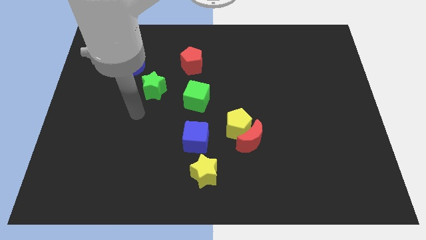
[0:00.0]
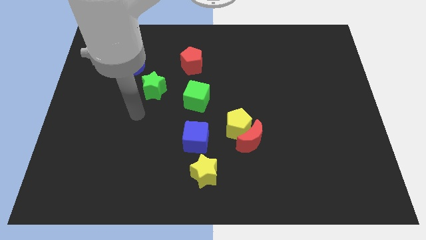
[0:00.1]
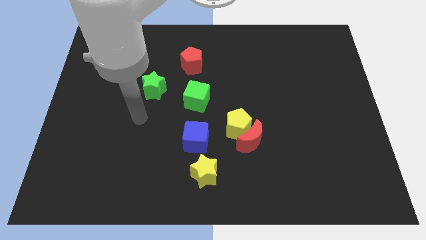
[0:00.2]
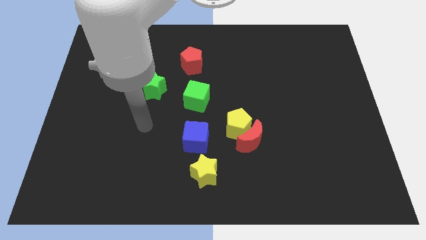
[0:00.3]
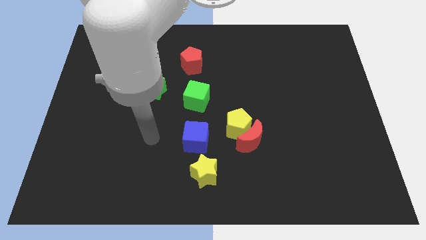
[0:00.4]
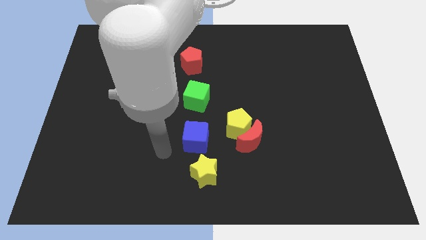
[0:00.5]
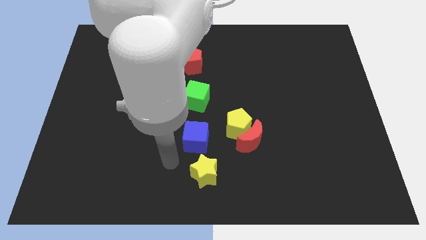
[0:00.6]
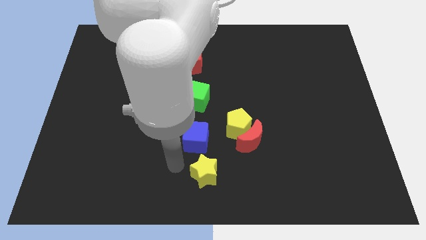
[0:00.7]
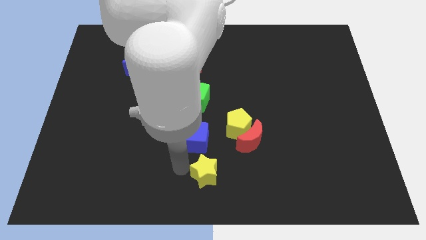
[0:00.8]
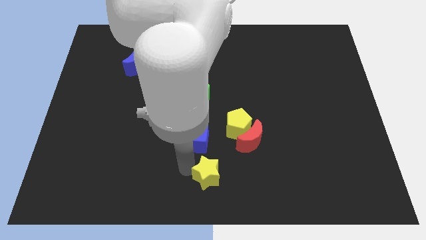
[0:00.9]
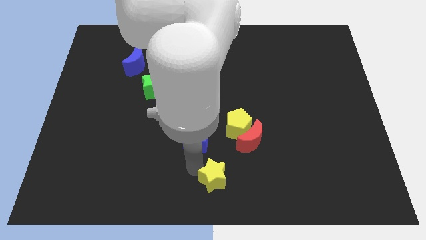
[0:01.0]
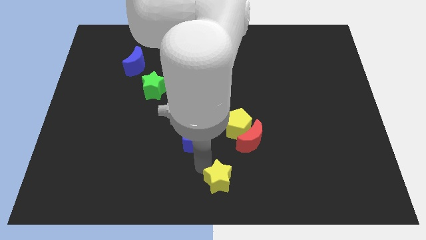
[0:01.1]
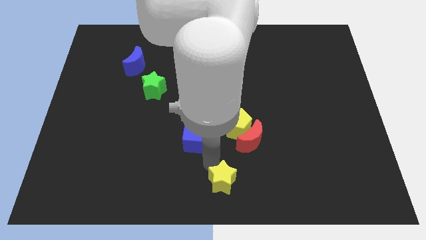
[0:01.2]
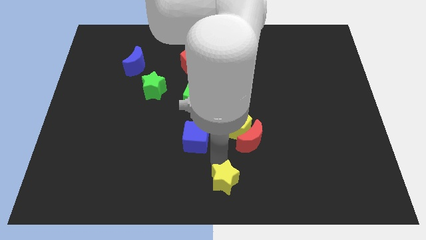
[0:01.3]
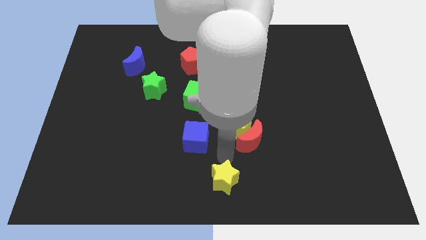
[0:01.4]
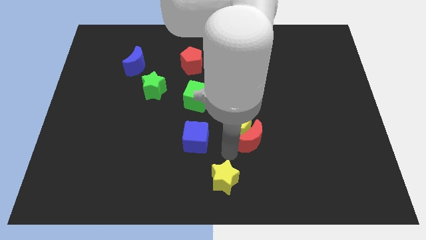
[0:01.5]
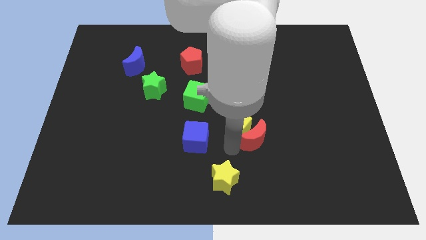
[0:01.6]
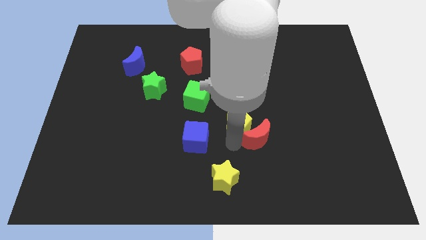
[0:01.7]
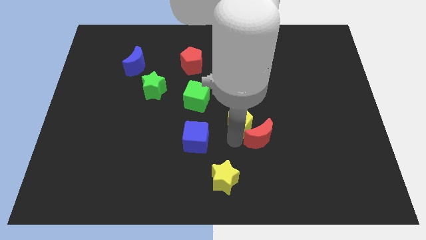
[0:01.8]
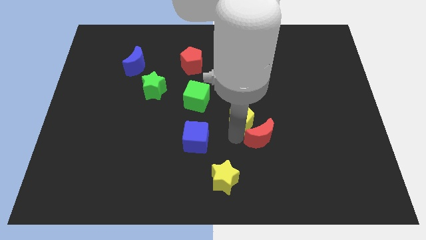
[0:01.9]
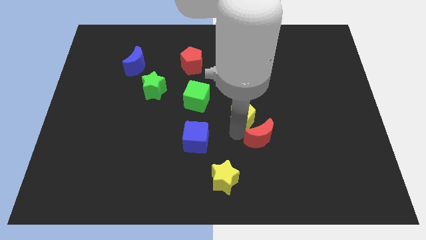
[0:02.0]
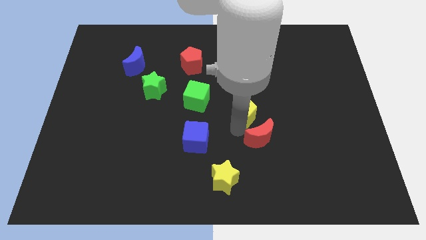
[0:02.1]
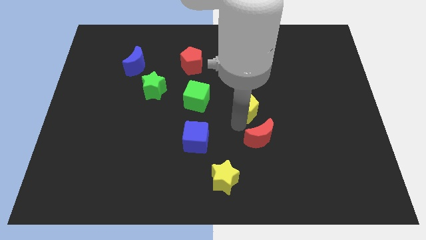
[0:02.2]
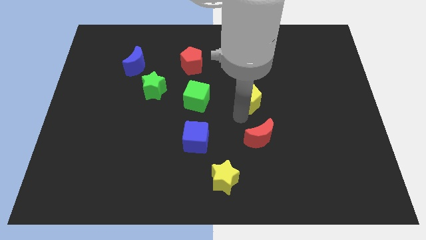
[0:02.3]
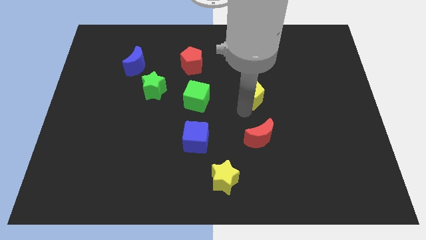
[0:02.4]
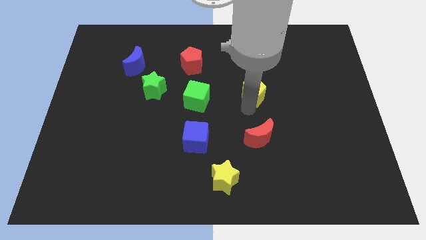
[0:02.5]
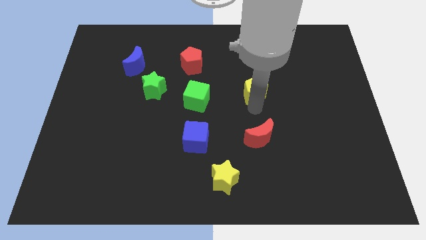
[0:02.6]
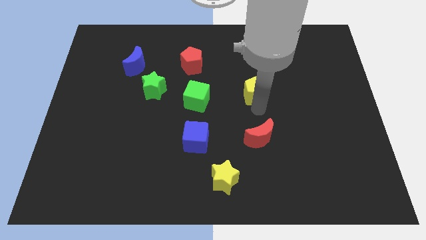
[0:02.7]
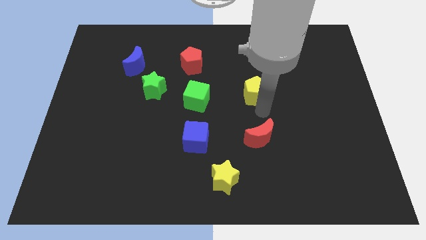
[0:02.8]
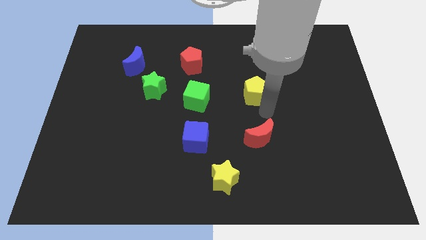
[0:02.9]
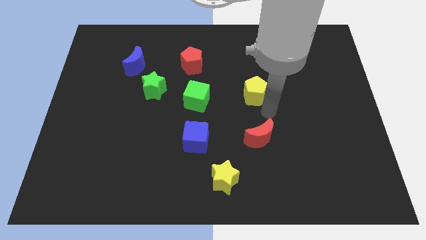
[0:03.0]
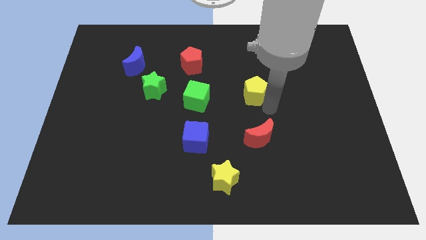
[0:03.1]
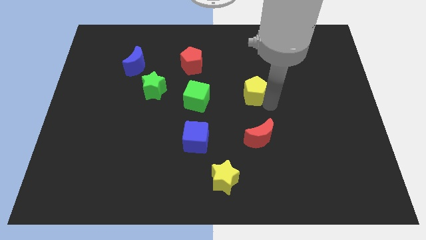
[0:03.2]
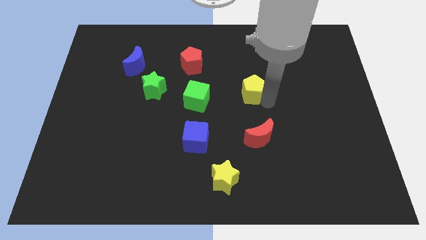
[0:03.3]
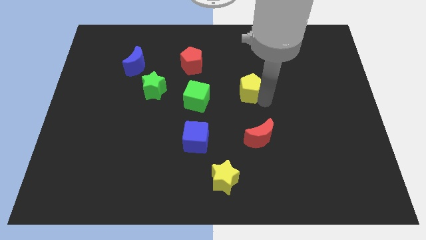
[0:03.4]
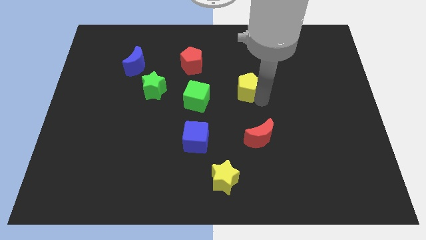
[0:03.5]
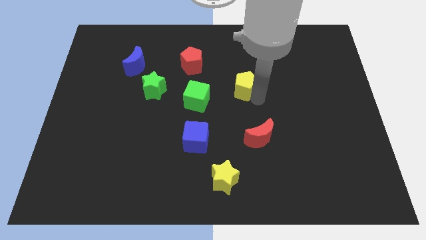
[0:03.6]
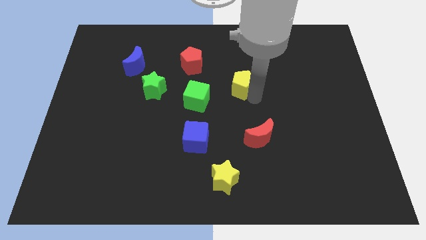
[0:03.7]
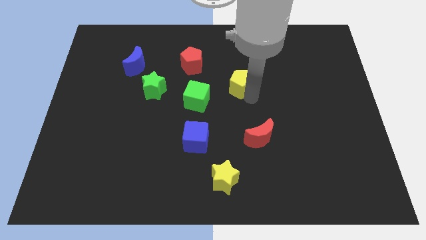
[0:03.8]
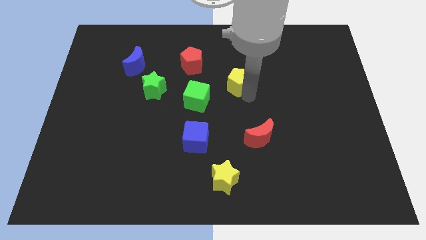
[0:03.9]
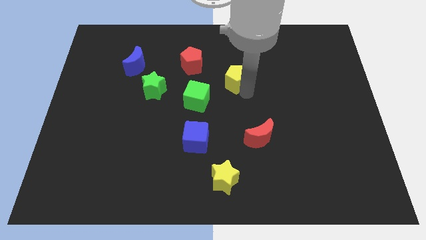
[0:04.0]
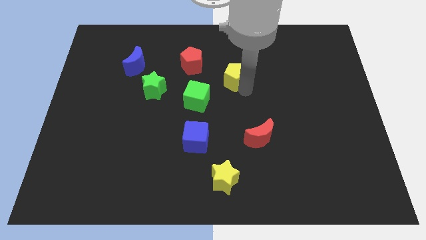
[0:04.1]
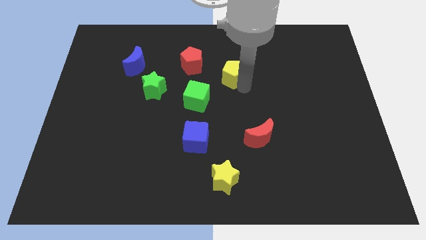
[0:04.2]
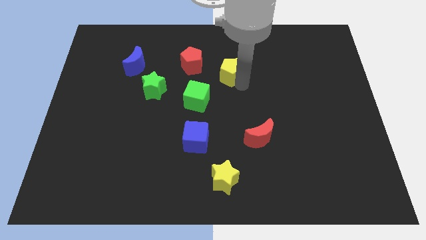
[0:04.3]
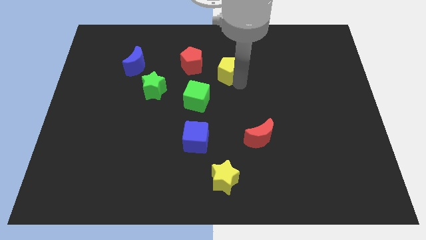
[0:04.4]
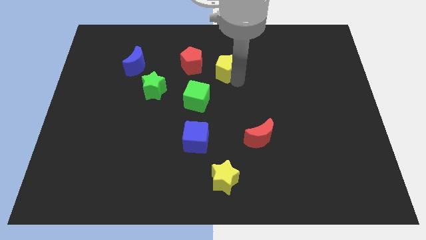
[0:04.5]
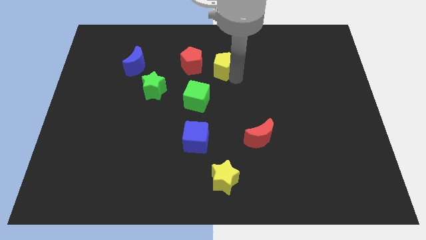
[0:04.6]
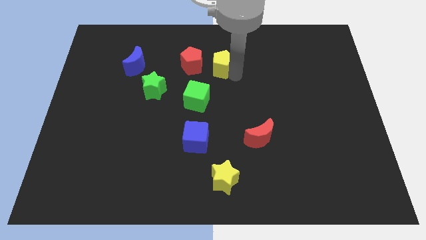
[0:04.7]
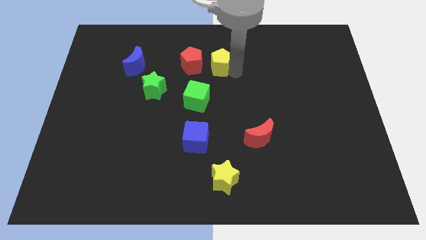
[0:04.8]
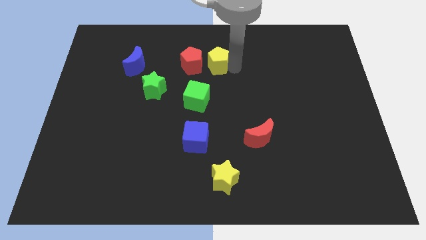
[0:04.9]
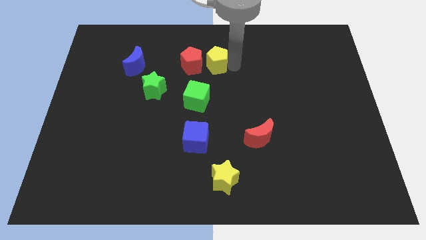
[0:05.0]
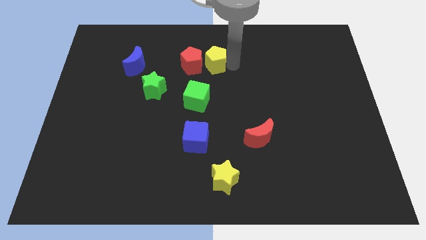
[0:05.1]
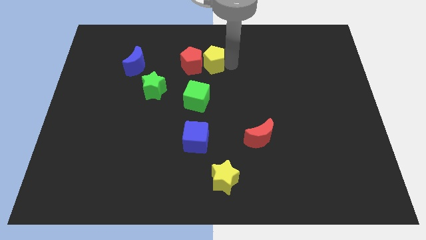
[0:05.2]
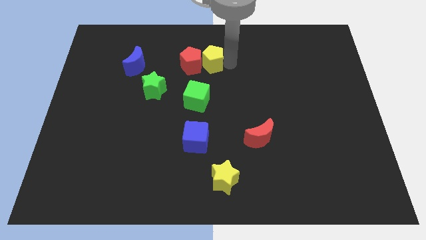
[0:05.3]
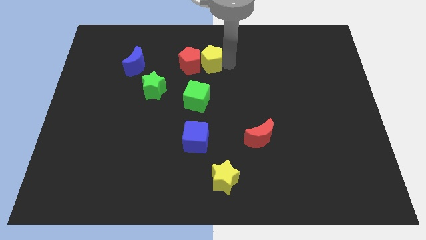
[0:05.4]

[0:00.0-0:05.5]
push the yellow pentagon to the red pentagon

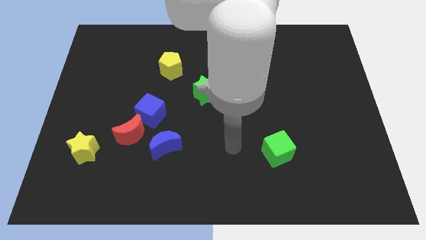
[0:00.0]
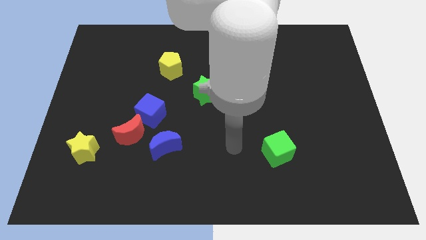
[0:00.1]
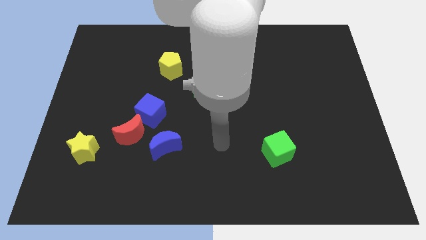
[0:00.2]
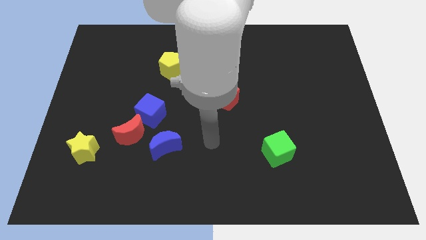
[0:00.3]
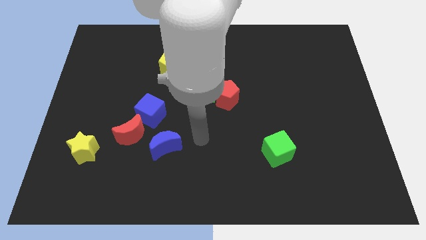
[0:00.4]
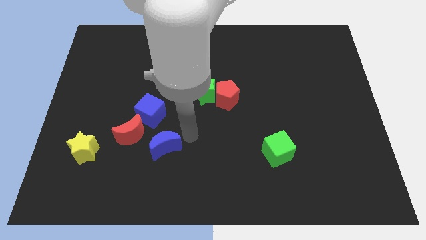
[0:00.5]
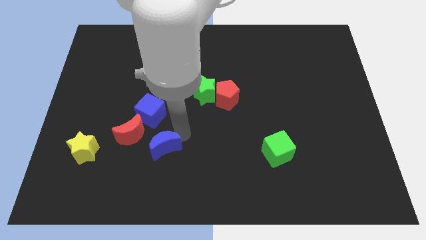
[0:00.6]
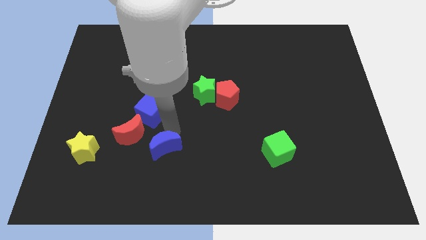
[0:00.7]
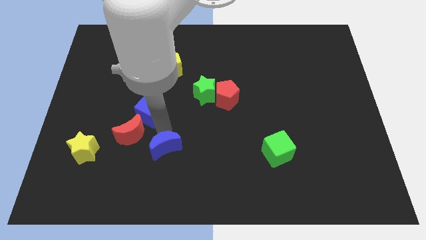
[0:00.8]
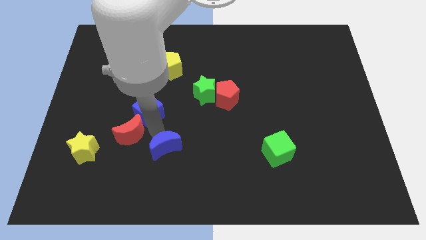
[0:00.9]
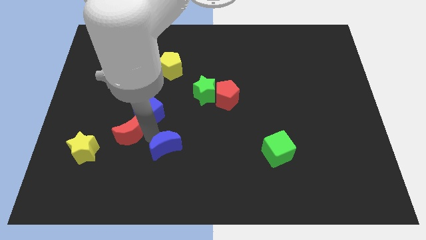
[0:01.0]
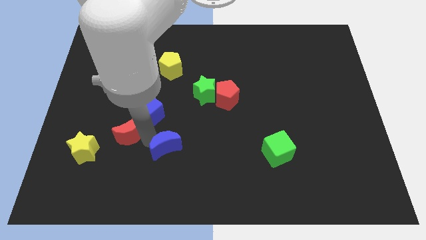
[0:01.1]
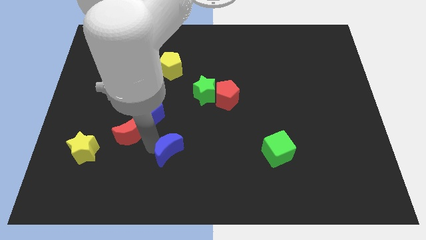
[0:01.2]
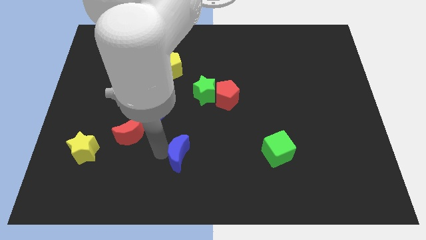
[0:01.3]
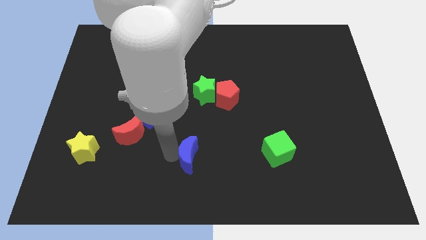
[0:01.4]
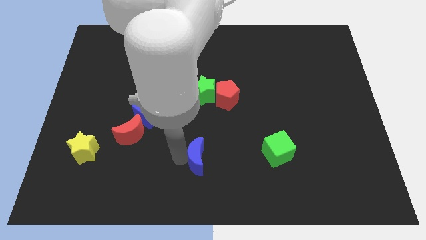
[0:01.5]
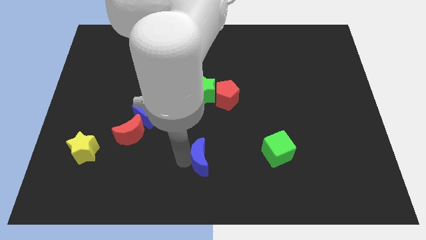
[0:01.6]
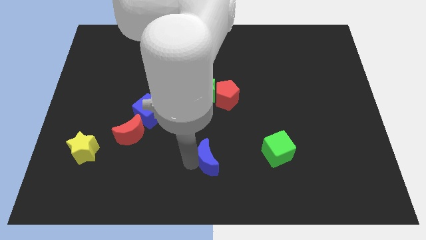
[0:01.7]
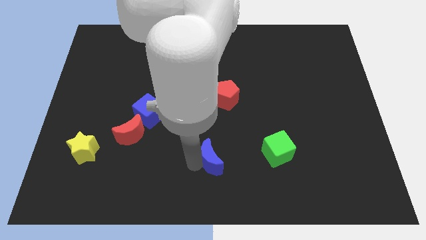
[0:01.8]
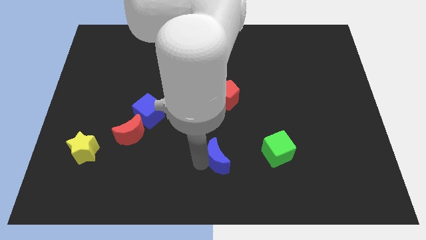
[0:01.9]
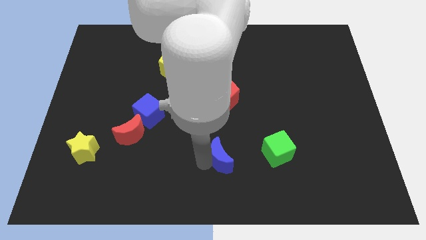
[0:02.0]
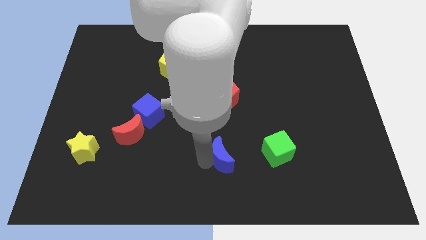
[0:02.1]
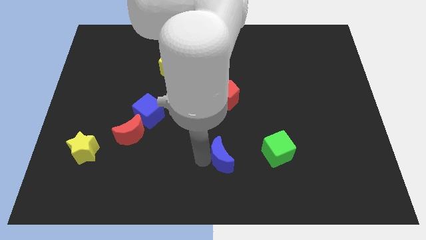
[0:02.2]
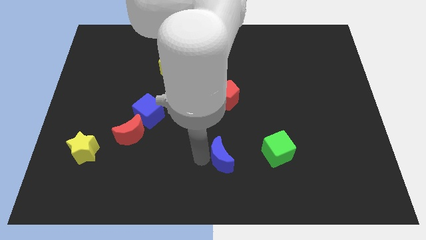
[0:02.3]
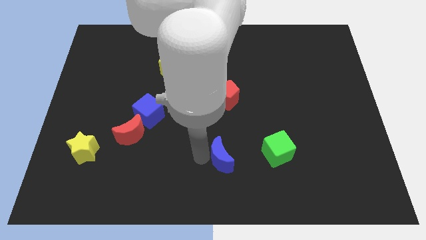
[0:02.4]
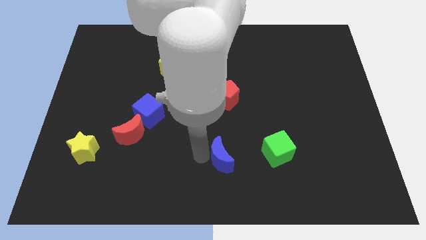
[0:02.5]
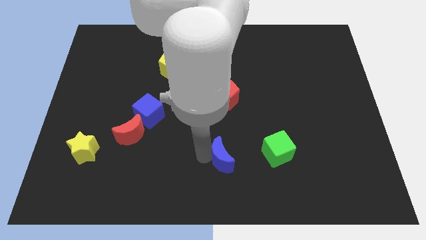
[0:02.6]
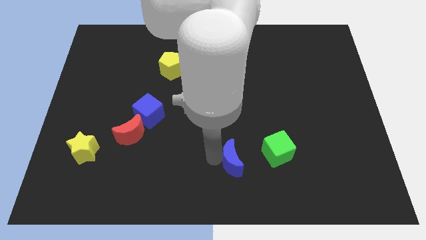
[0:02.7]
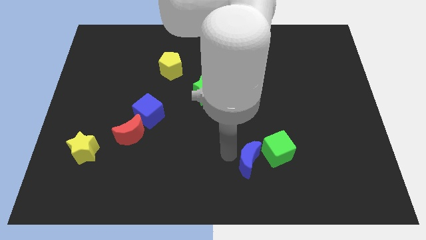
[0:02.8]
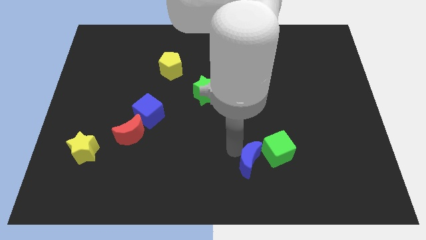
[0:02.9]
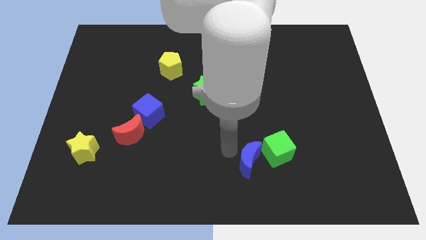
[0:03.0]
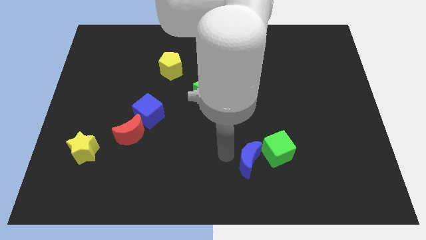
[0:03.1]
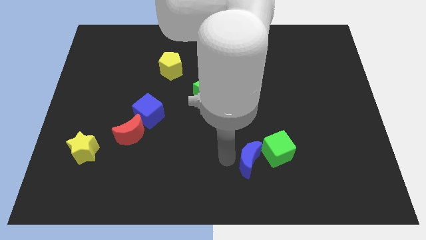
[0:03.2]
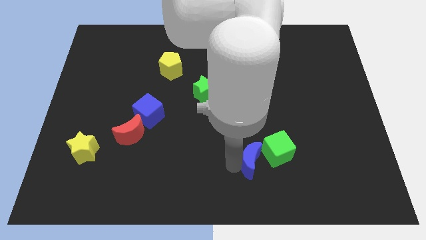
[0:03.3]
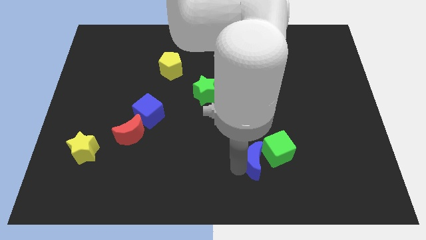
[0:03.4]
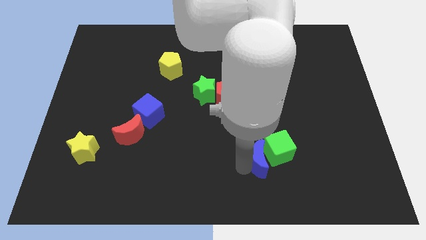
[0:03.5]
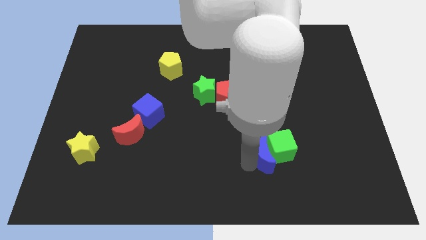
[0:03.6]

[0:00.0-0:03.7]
push the blue moon towards the green cube
